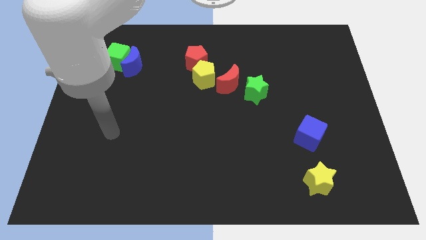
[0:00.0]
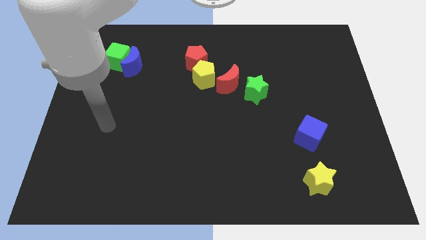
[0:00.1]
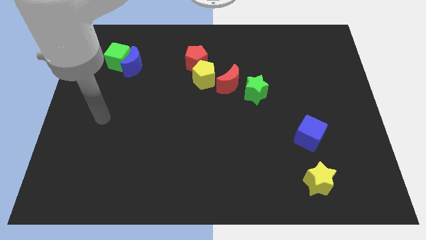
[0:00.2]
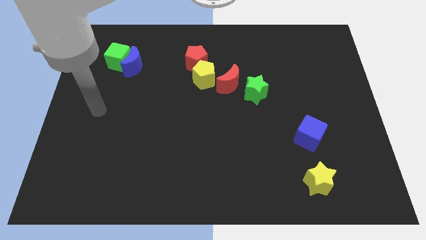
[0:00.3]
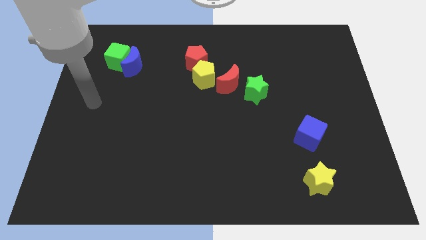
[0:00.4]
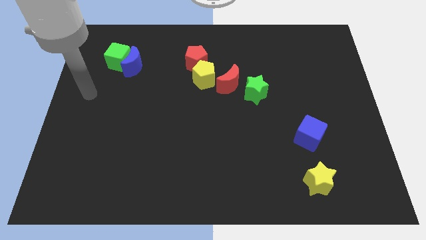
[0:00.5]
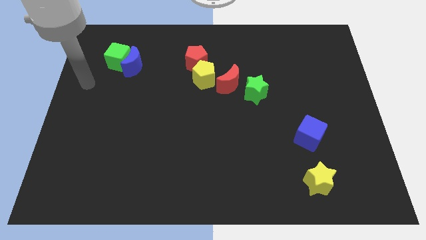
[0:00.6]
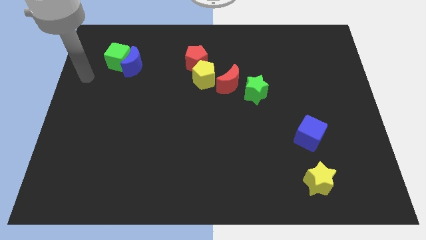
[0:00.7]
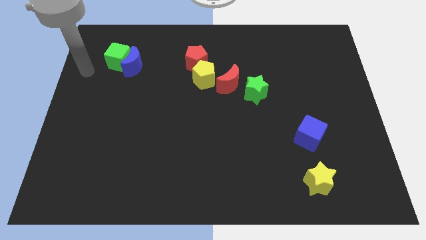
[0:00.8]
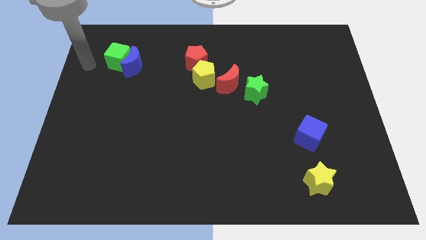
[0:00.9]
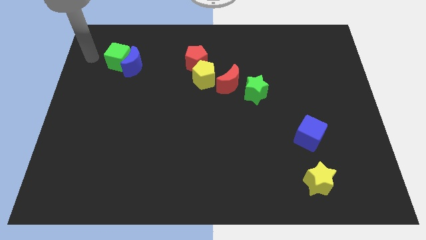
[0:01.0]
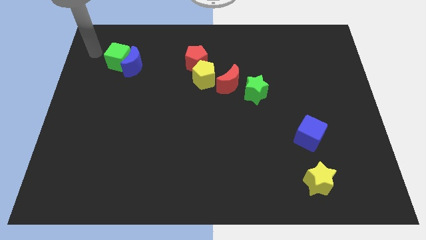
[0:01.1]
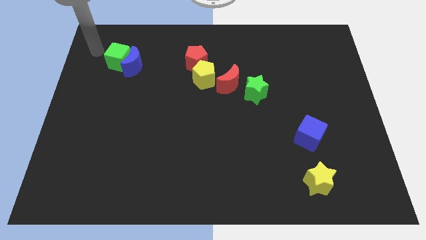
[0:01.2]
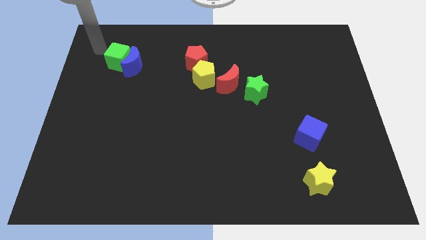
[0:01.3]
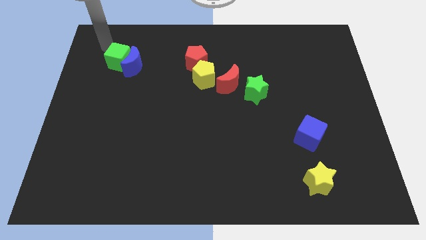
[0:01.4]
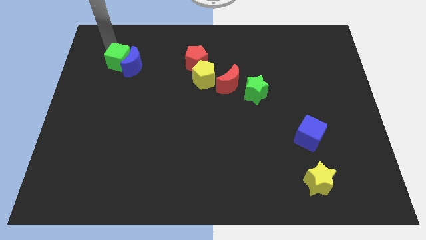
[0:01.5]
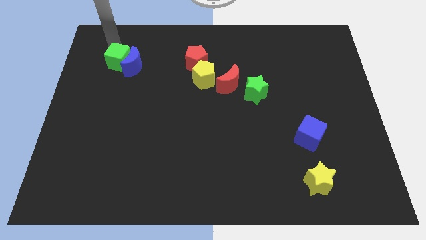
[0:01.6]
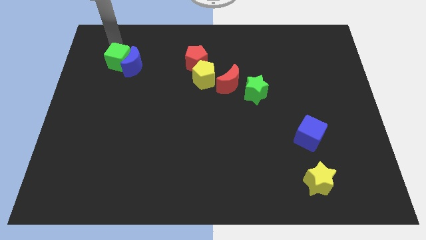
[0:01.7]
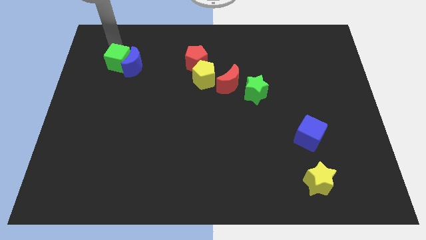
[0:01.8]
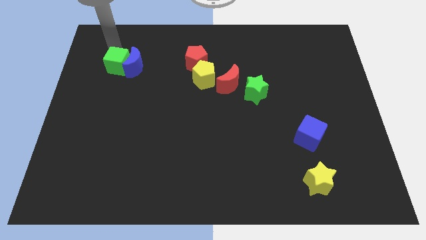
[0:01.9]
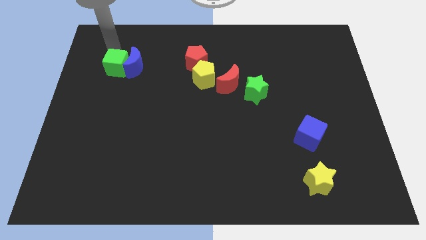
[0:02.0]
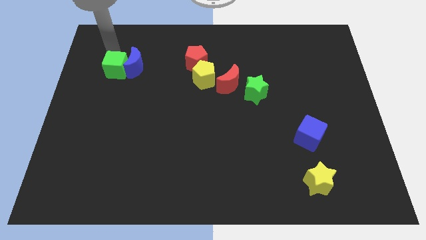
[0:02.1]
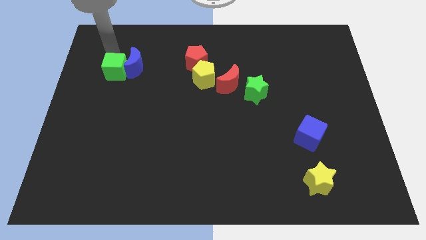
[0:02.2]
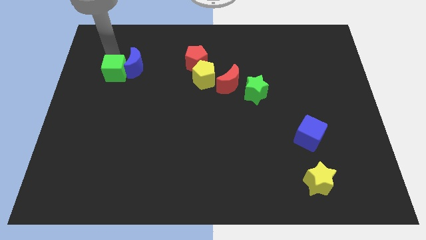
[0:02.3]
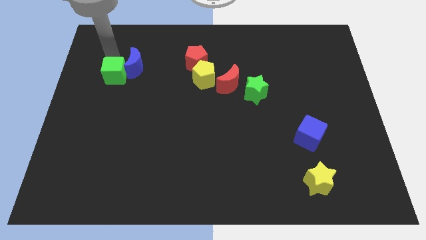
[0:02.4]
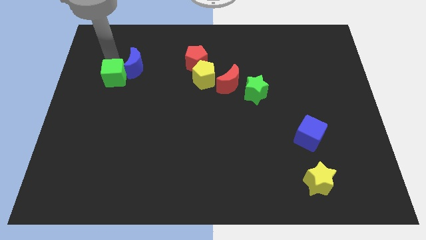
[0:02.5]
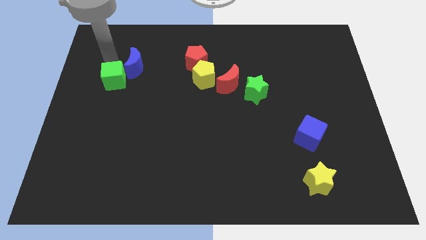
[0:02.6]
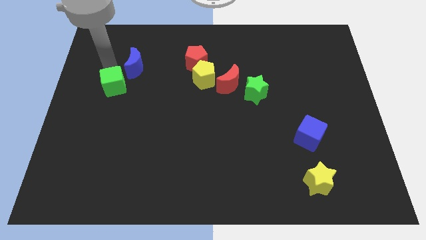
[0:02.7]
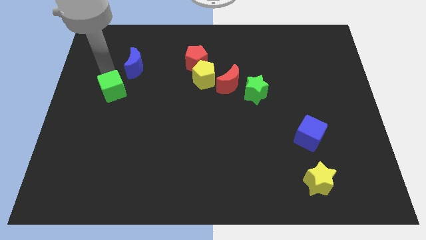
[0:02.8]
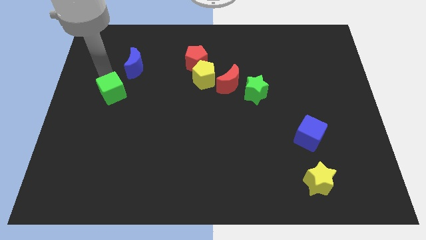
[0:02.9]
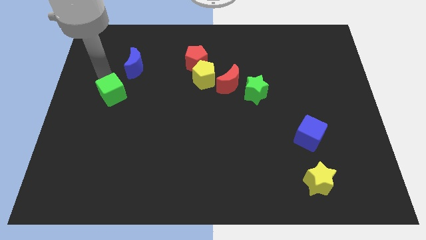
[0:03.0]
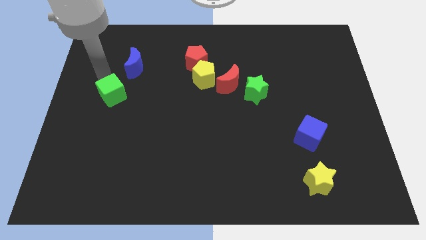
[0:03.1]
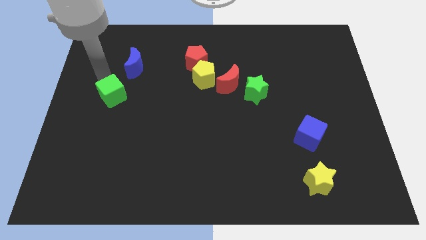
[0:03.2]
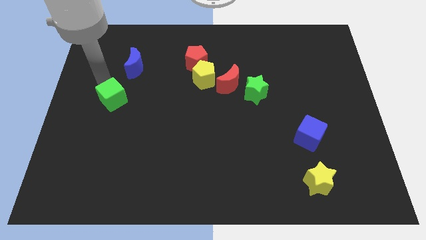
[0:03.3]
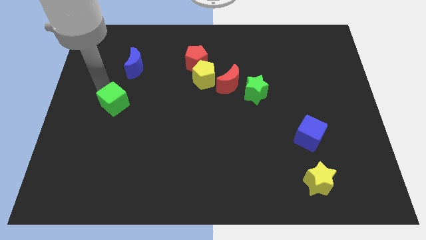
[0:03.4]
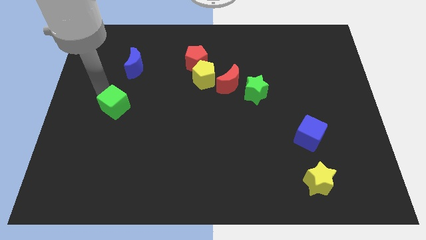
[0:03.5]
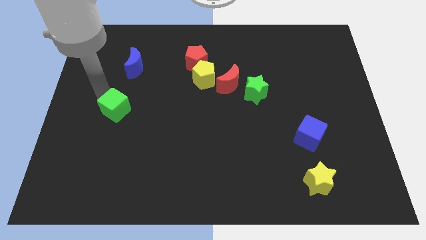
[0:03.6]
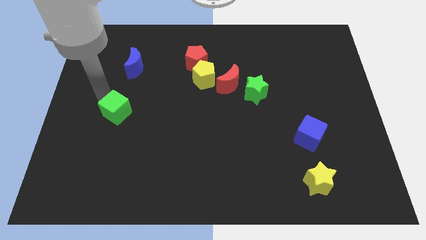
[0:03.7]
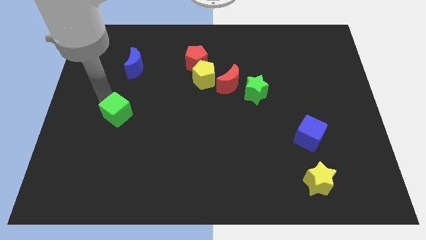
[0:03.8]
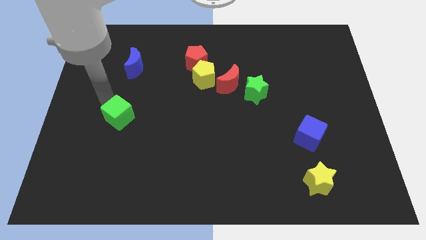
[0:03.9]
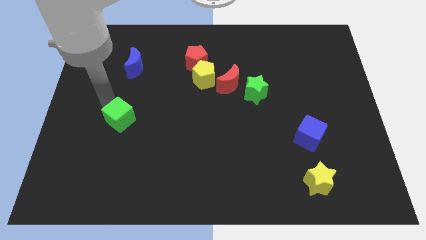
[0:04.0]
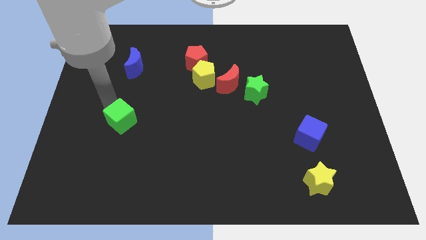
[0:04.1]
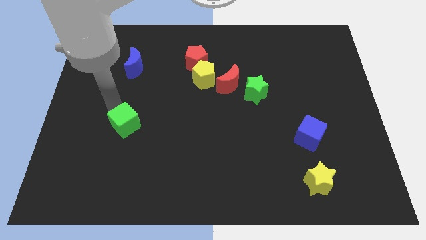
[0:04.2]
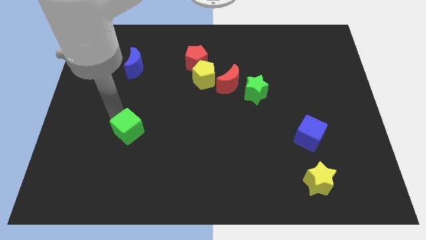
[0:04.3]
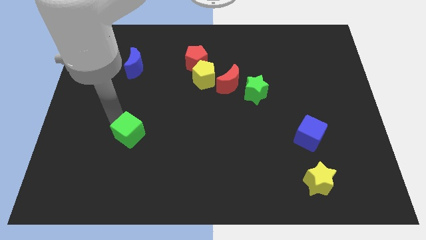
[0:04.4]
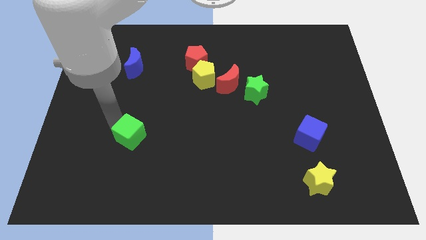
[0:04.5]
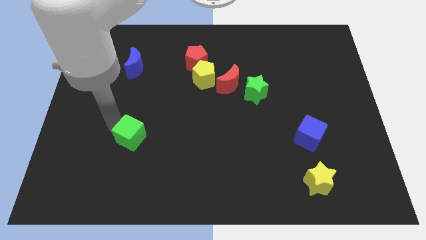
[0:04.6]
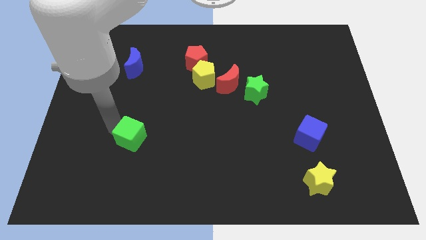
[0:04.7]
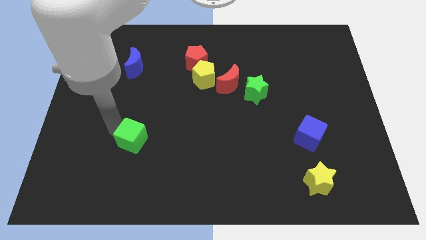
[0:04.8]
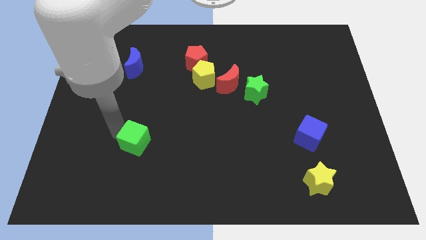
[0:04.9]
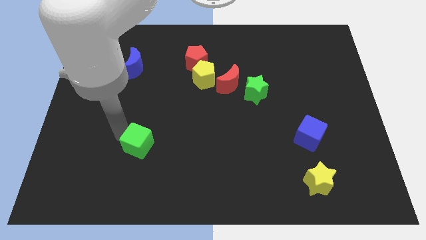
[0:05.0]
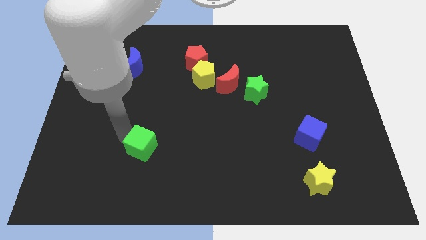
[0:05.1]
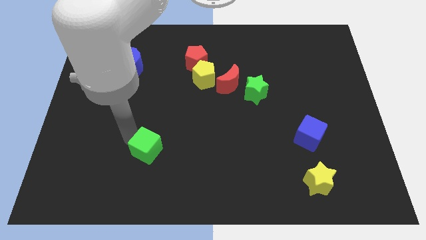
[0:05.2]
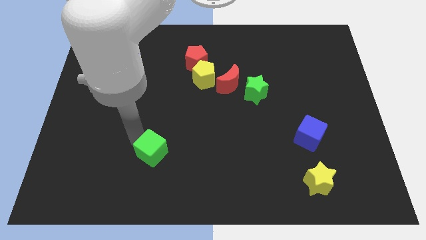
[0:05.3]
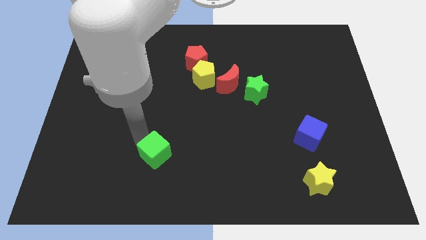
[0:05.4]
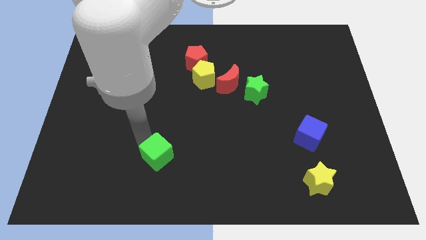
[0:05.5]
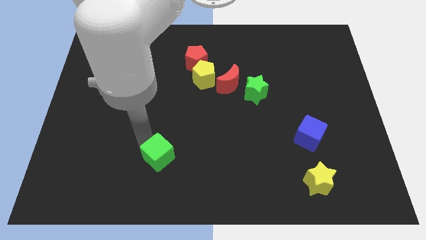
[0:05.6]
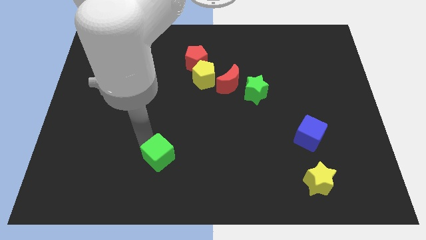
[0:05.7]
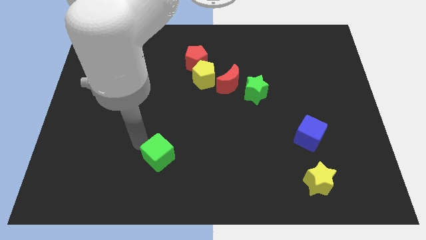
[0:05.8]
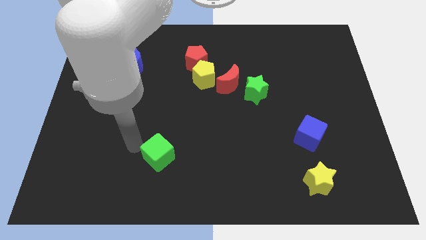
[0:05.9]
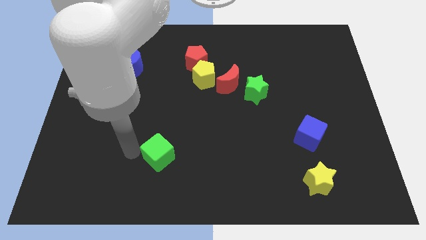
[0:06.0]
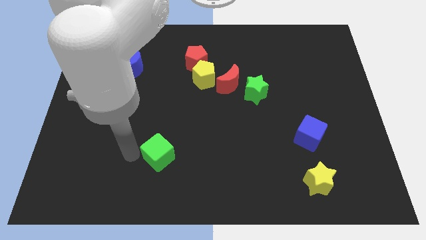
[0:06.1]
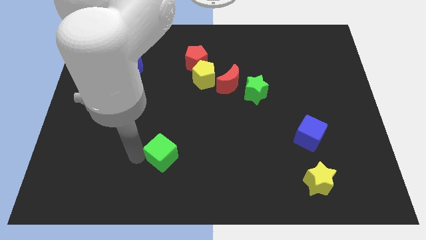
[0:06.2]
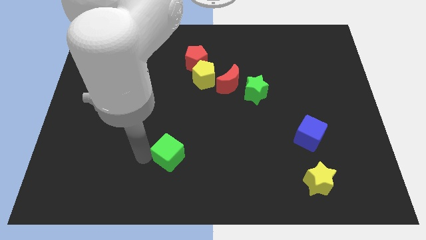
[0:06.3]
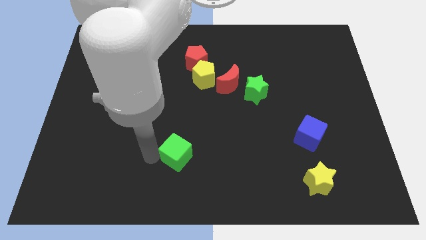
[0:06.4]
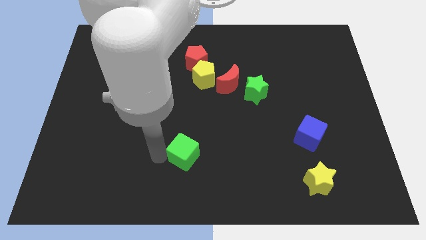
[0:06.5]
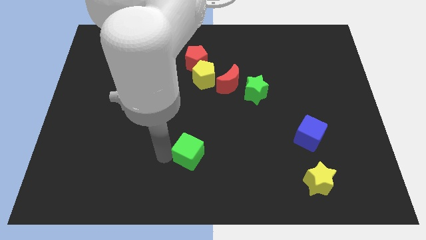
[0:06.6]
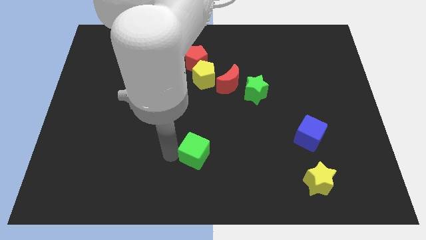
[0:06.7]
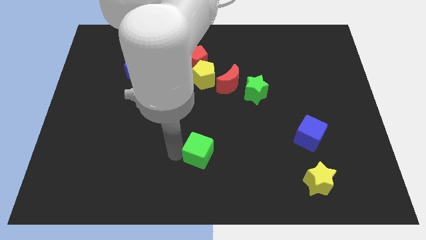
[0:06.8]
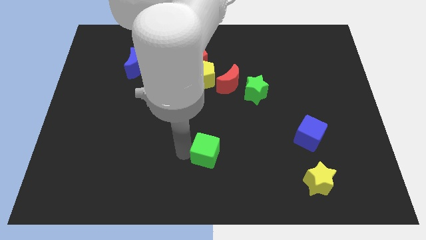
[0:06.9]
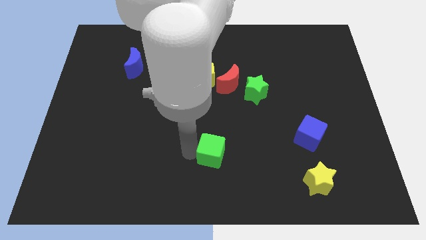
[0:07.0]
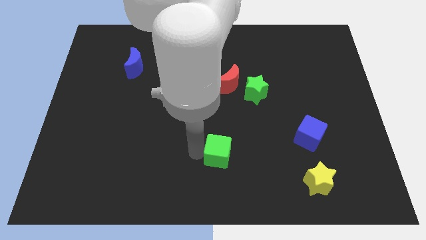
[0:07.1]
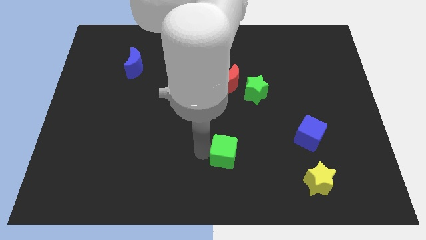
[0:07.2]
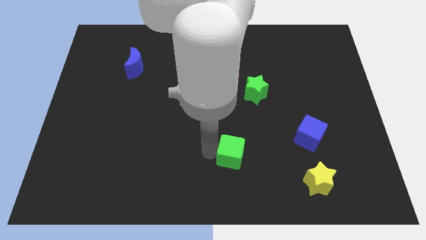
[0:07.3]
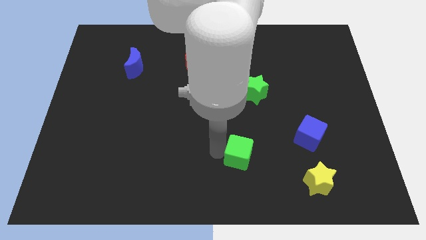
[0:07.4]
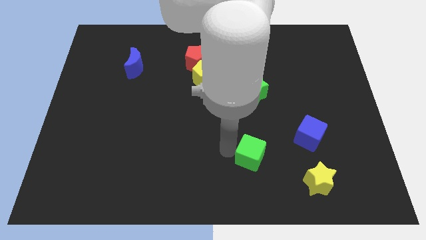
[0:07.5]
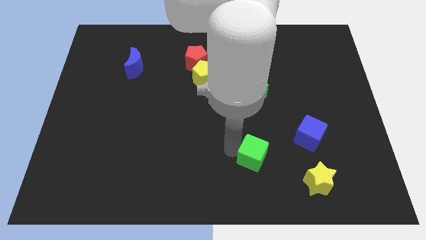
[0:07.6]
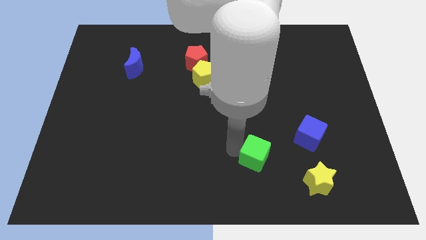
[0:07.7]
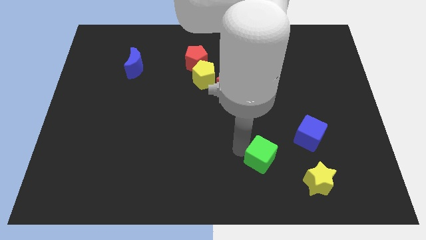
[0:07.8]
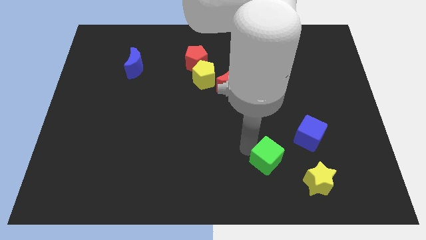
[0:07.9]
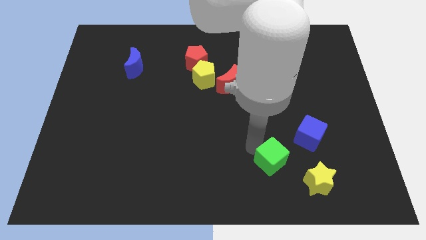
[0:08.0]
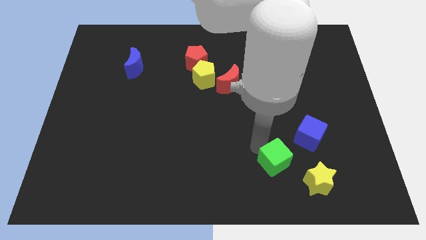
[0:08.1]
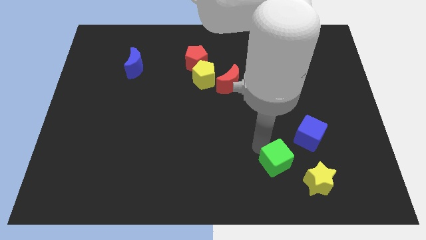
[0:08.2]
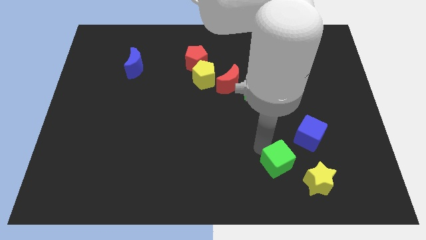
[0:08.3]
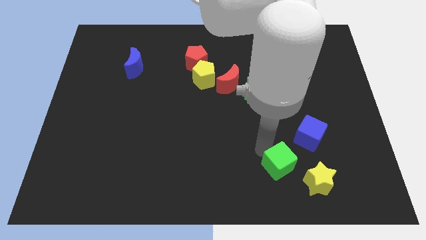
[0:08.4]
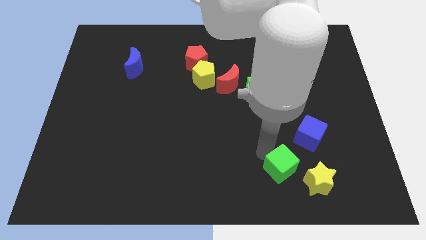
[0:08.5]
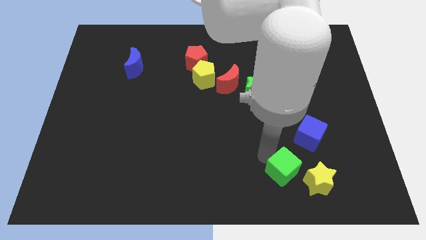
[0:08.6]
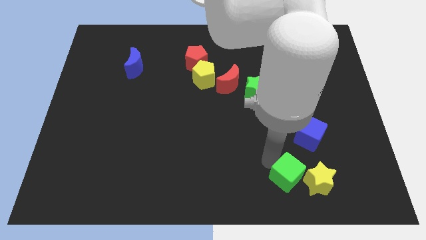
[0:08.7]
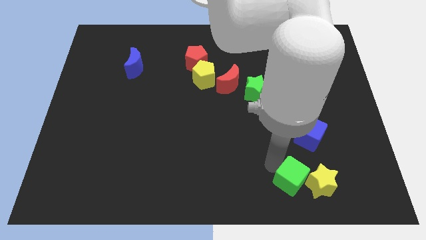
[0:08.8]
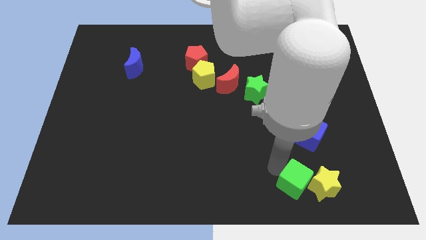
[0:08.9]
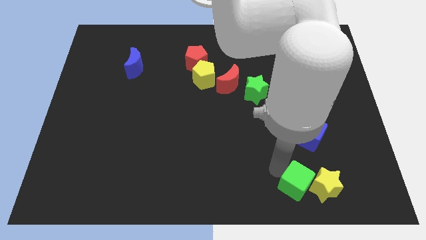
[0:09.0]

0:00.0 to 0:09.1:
push the green cube towards the yellow star
